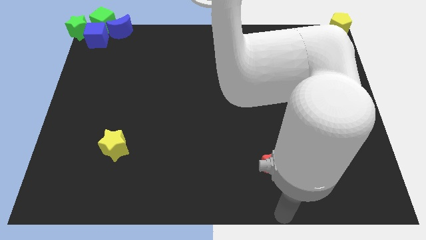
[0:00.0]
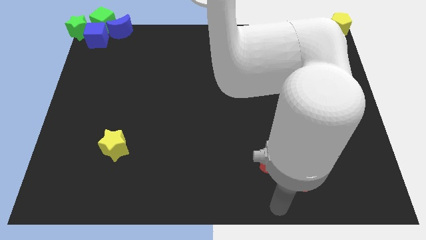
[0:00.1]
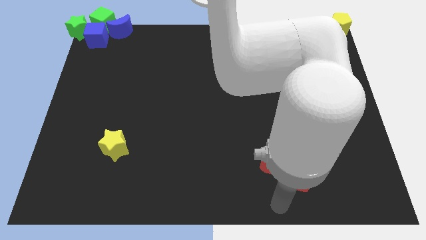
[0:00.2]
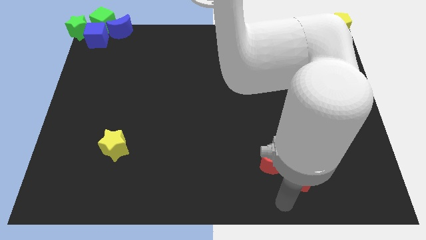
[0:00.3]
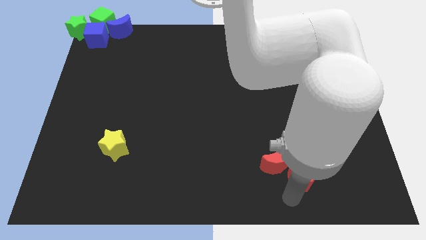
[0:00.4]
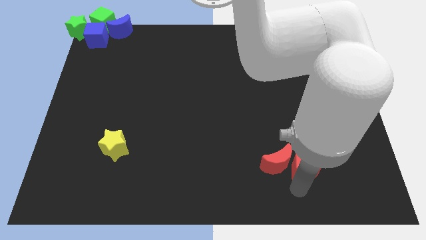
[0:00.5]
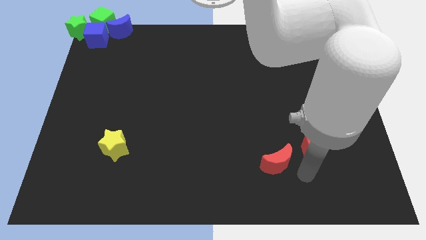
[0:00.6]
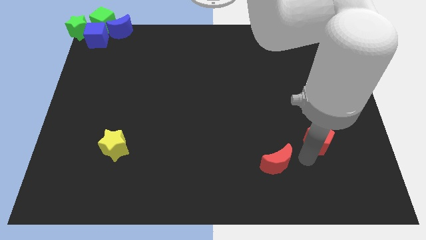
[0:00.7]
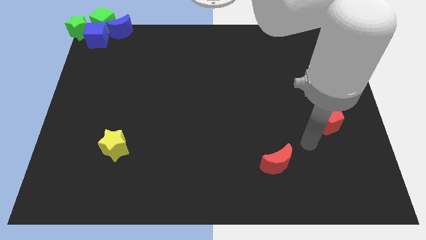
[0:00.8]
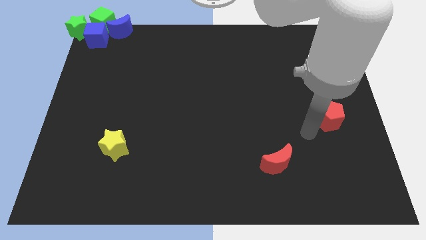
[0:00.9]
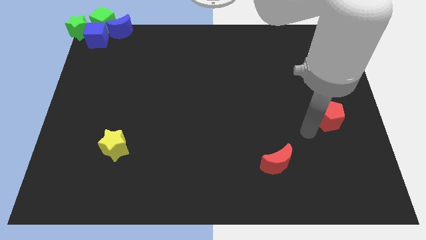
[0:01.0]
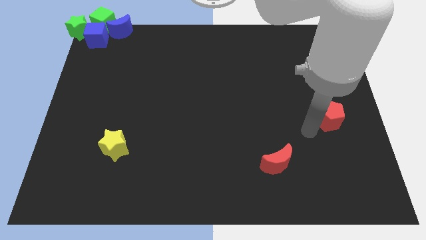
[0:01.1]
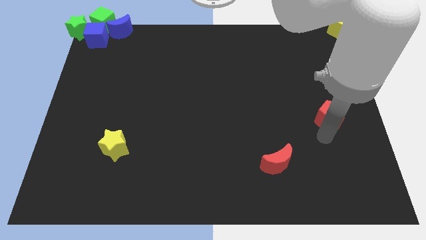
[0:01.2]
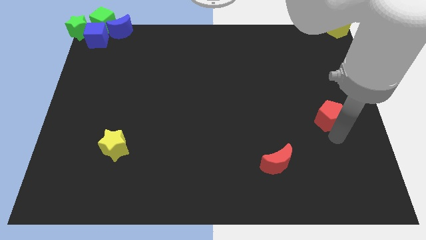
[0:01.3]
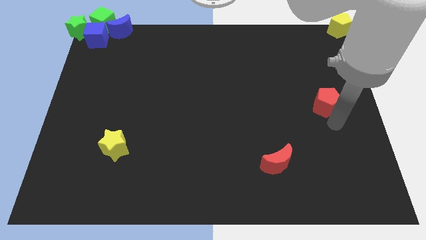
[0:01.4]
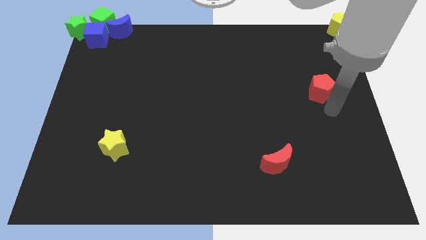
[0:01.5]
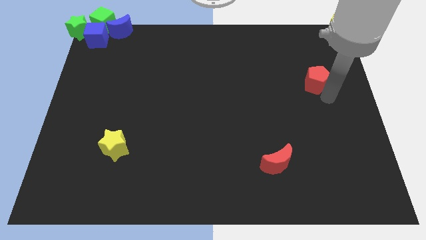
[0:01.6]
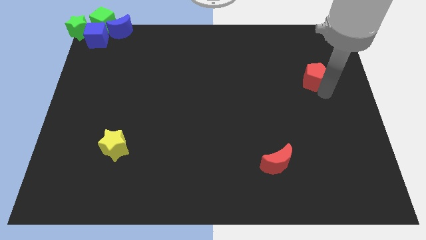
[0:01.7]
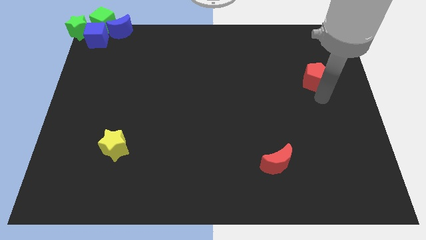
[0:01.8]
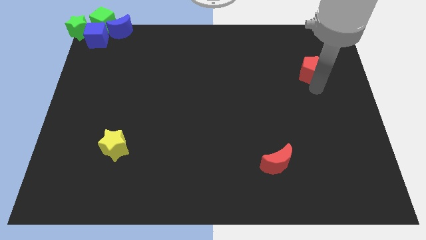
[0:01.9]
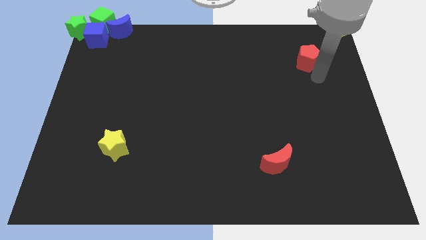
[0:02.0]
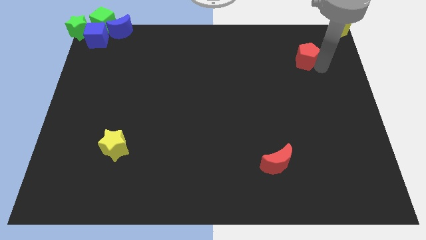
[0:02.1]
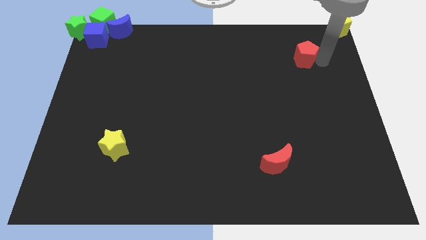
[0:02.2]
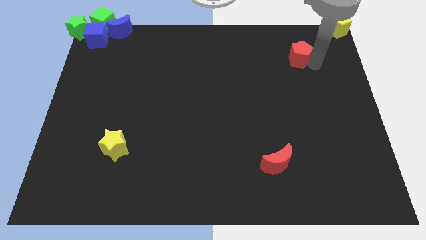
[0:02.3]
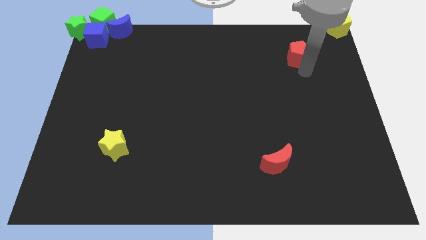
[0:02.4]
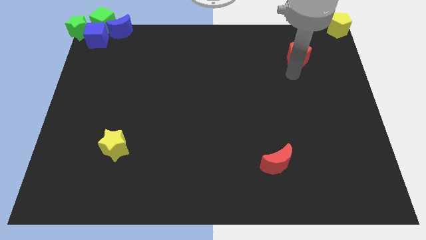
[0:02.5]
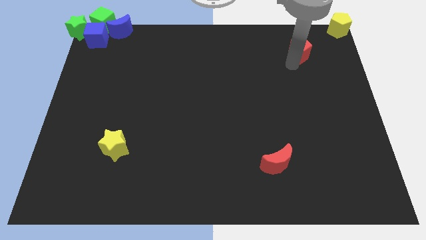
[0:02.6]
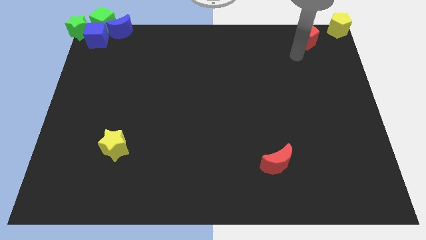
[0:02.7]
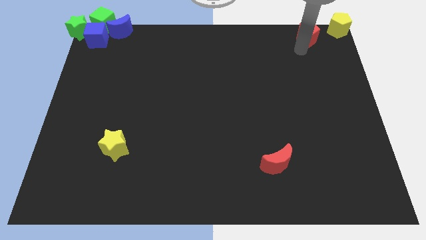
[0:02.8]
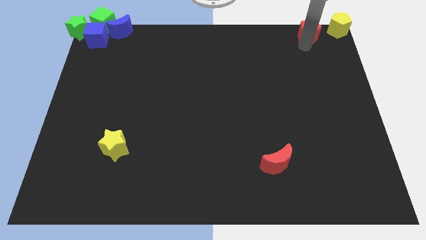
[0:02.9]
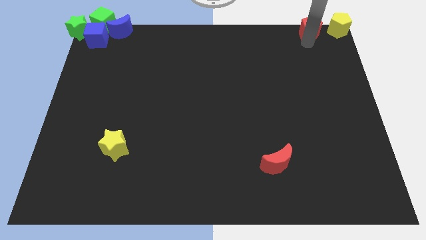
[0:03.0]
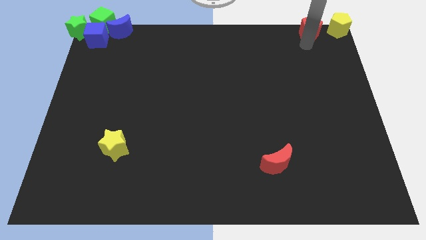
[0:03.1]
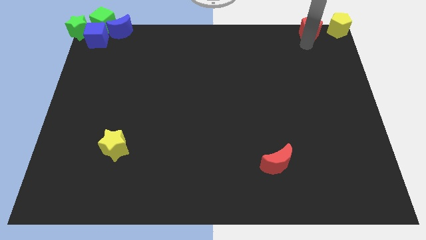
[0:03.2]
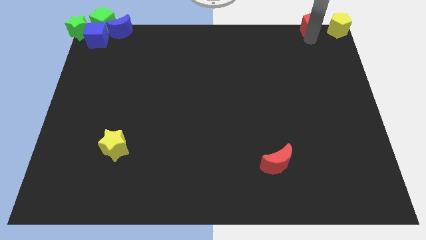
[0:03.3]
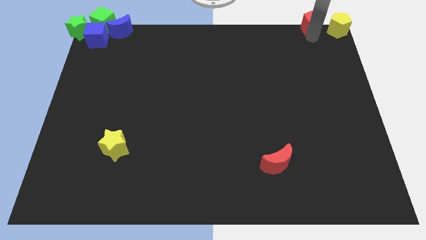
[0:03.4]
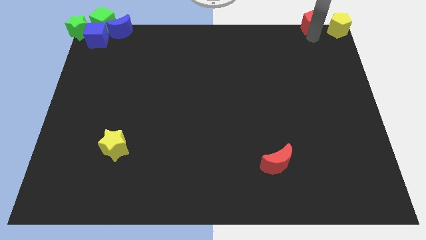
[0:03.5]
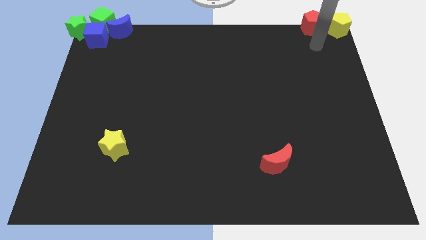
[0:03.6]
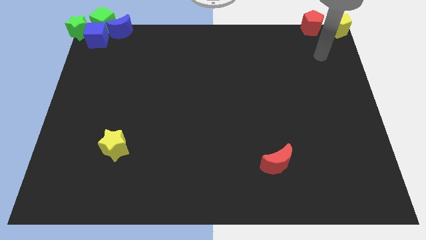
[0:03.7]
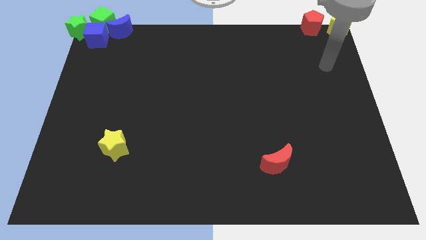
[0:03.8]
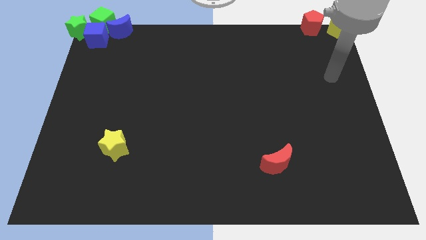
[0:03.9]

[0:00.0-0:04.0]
place the red pentagon to the left of the yellow pentagon

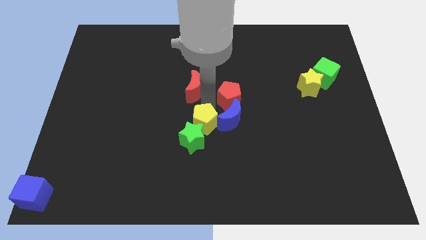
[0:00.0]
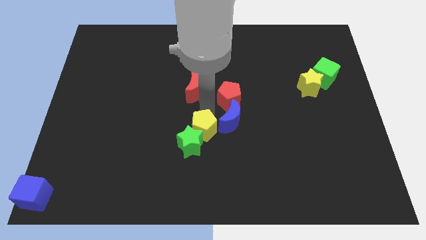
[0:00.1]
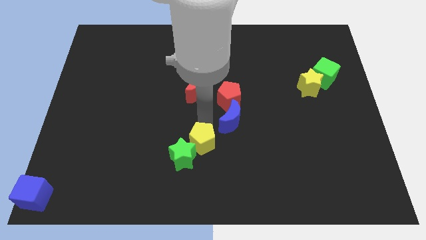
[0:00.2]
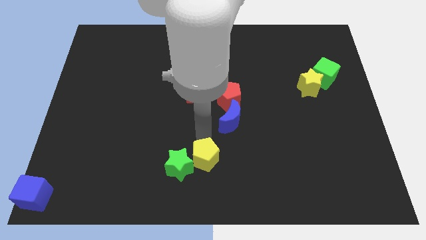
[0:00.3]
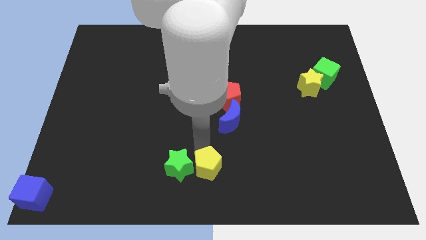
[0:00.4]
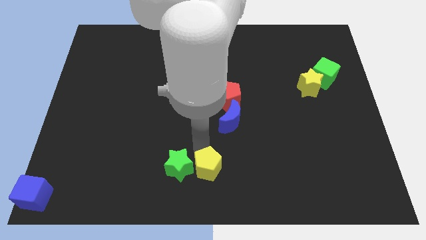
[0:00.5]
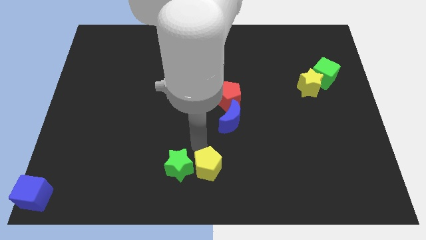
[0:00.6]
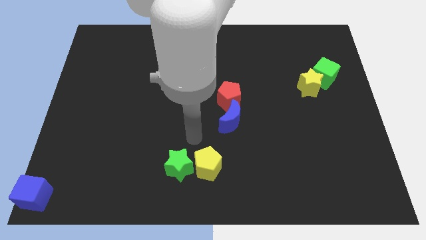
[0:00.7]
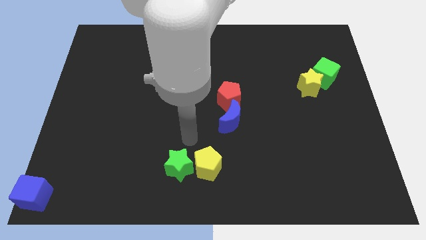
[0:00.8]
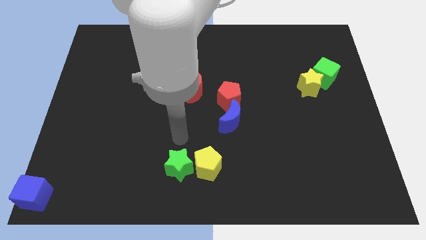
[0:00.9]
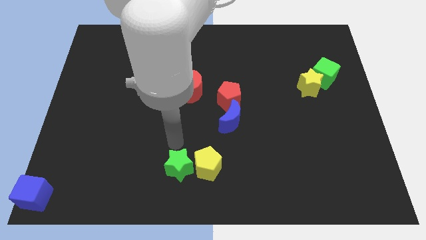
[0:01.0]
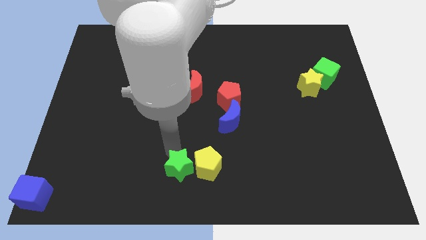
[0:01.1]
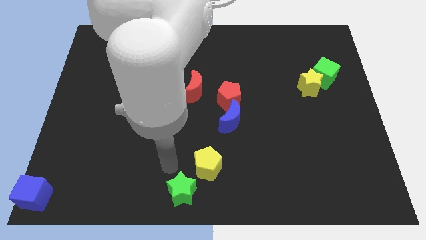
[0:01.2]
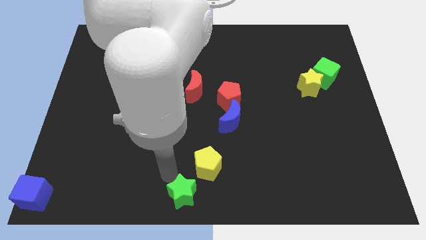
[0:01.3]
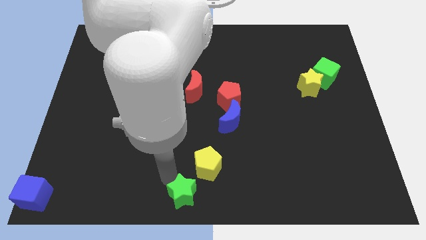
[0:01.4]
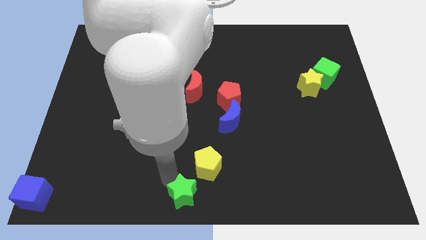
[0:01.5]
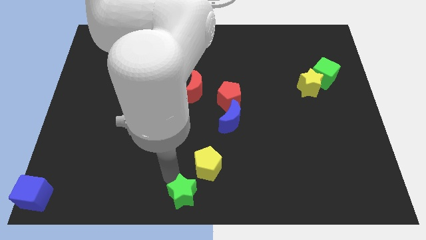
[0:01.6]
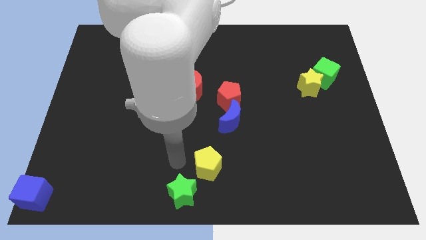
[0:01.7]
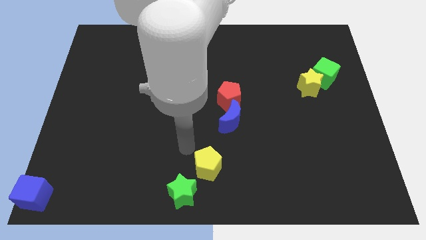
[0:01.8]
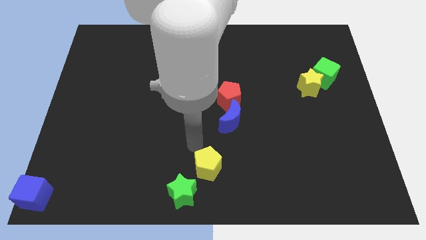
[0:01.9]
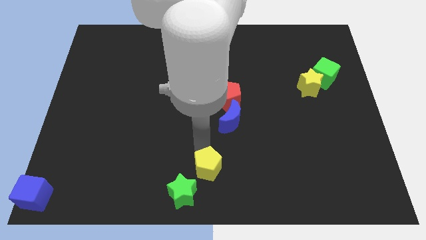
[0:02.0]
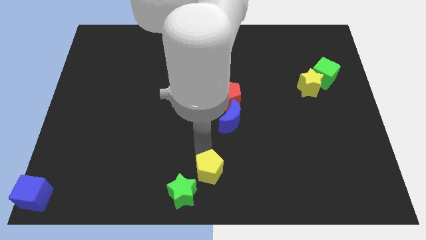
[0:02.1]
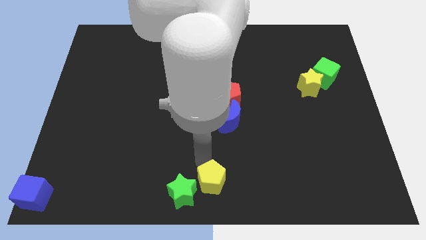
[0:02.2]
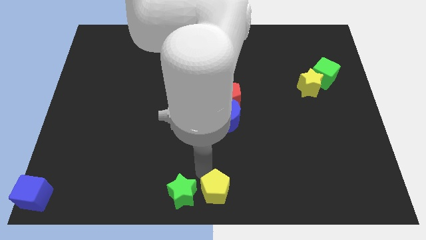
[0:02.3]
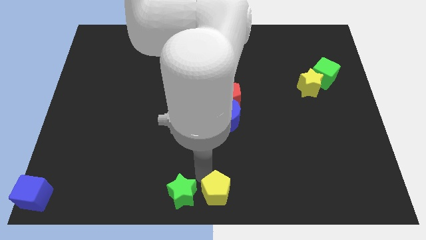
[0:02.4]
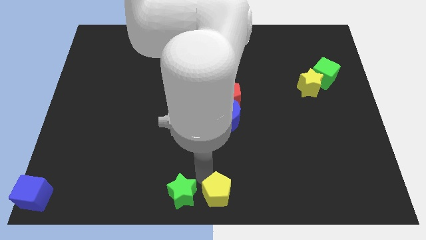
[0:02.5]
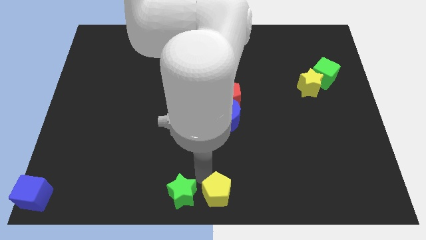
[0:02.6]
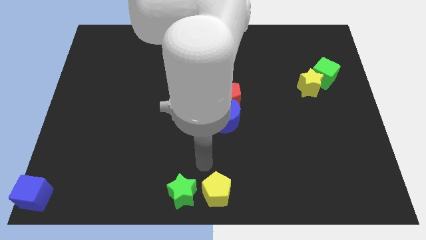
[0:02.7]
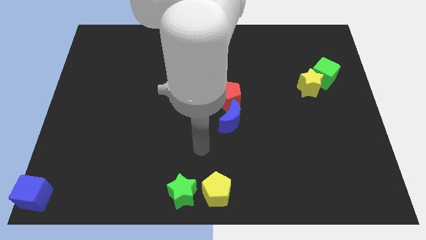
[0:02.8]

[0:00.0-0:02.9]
drag the yellow pentagon along with green star towards the bottom center of the board

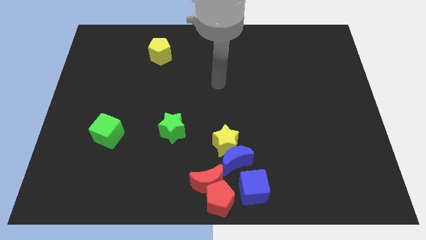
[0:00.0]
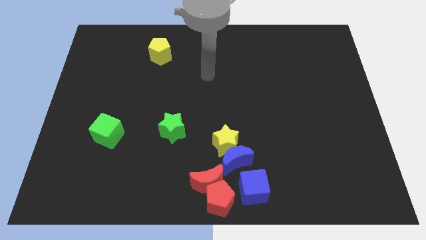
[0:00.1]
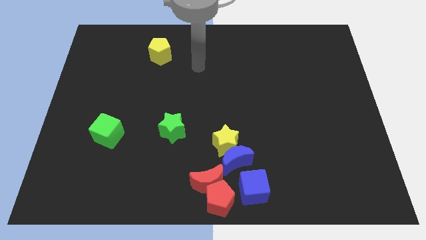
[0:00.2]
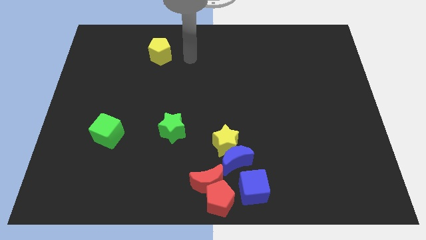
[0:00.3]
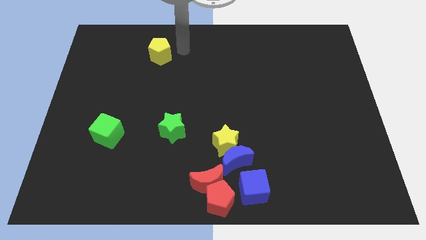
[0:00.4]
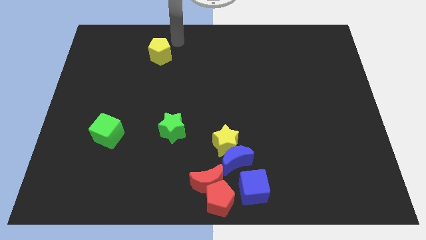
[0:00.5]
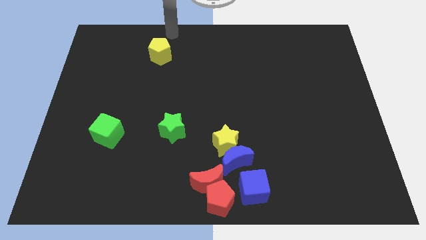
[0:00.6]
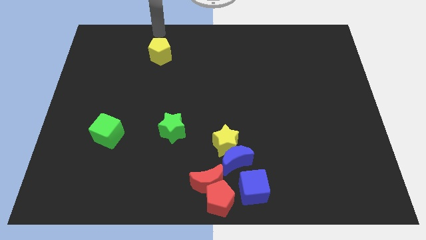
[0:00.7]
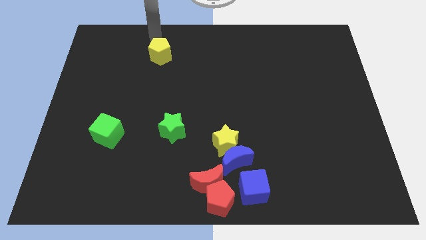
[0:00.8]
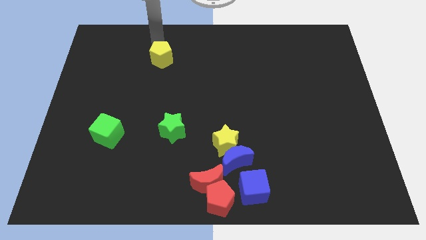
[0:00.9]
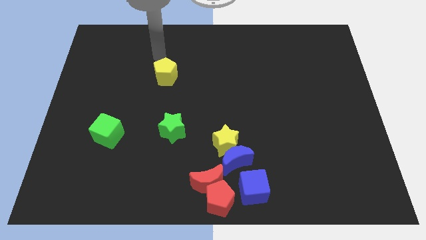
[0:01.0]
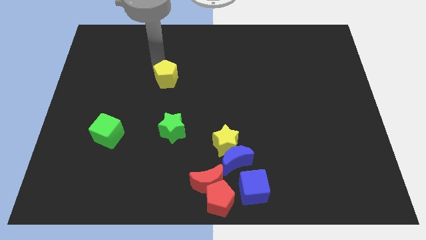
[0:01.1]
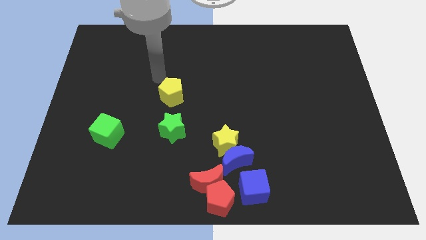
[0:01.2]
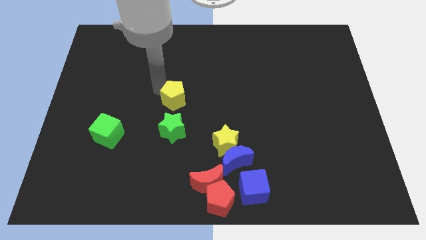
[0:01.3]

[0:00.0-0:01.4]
push the yellow pentagon closer to the green star

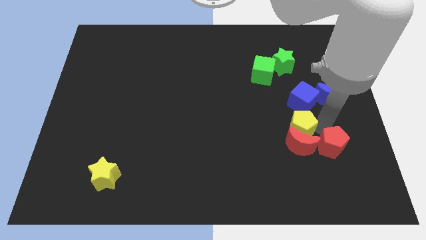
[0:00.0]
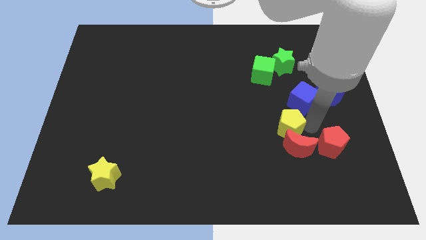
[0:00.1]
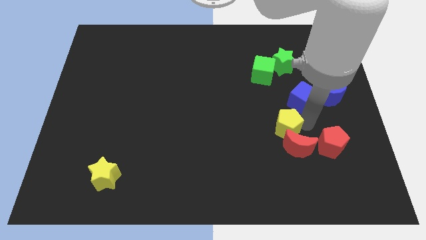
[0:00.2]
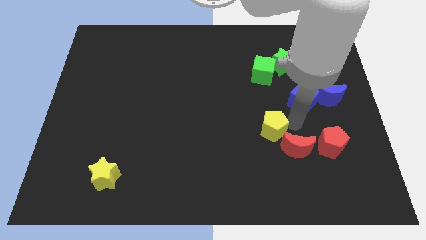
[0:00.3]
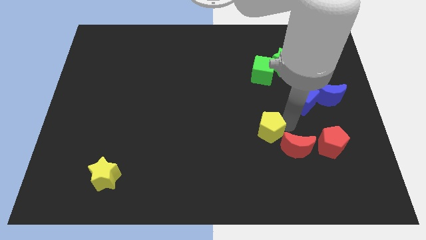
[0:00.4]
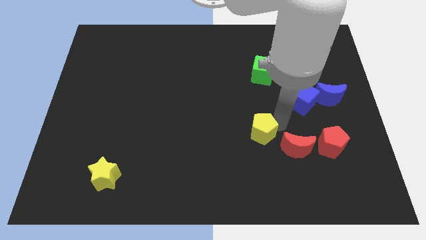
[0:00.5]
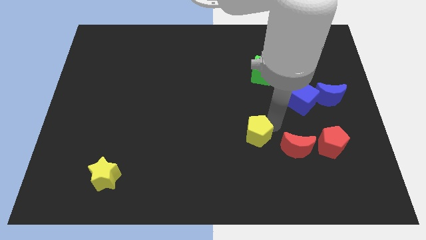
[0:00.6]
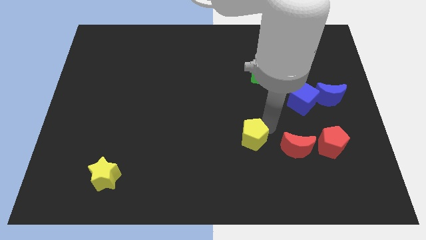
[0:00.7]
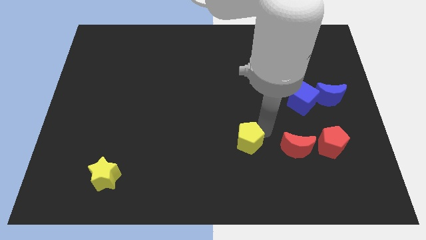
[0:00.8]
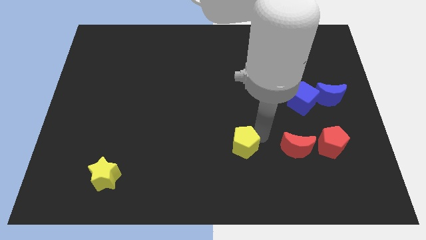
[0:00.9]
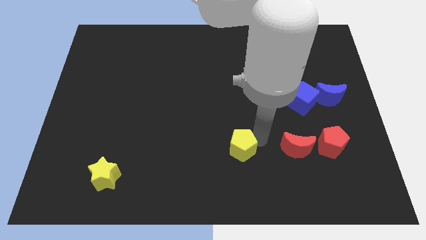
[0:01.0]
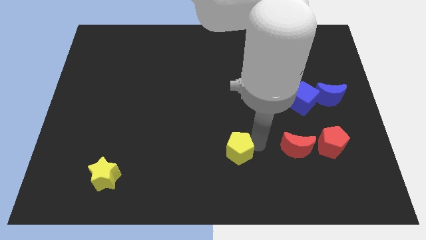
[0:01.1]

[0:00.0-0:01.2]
separate yellow pentagon from the red moon
